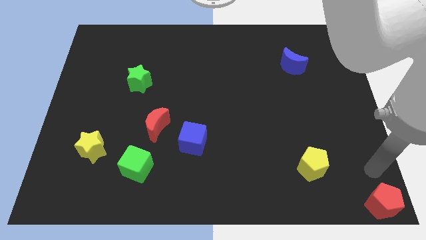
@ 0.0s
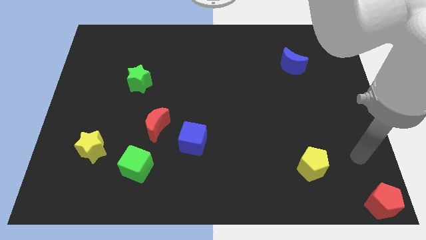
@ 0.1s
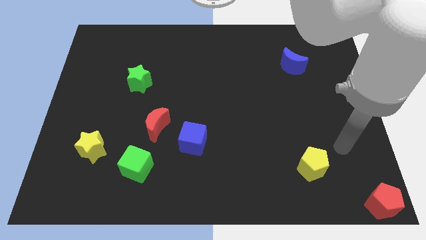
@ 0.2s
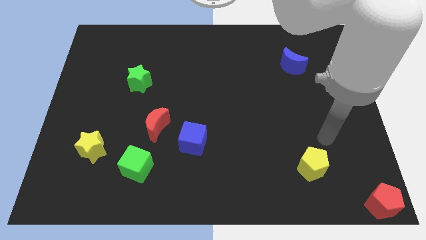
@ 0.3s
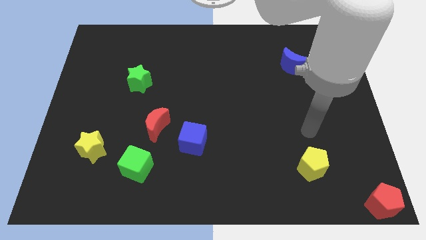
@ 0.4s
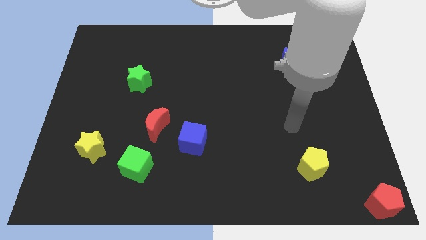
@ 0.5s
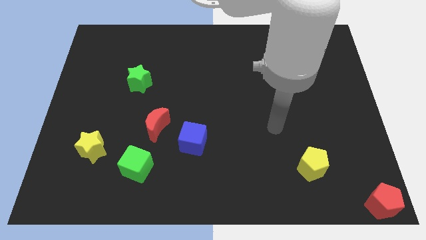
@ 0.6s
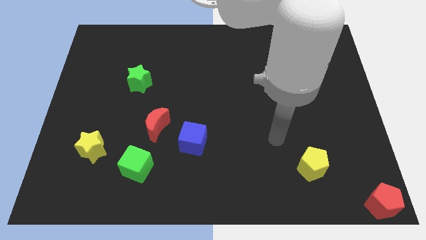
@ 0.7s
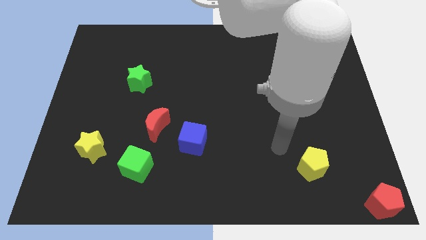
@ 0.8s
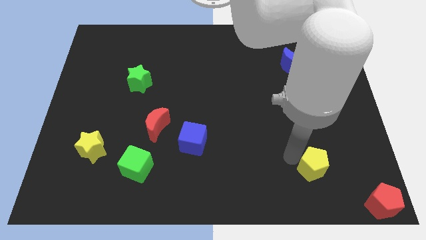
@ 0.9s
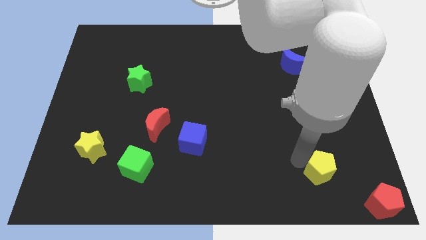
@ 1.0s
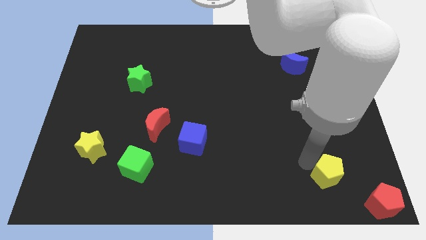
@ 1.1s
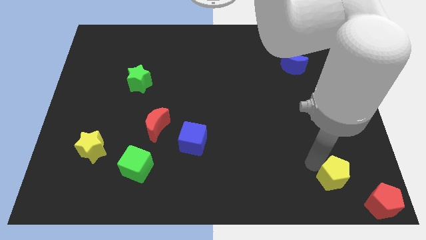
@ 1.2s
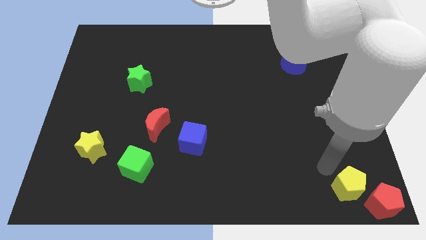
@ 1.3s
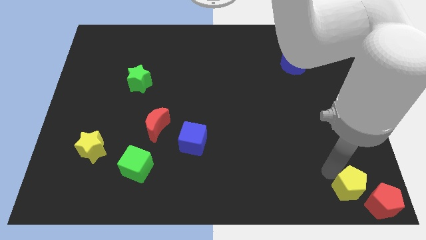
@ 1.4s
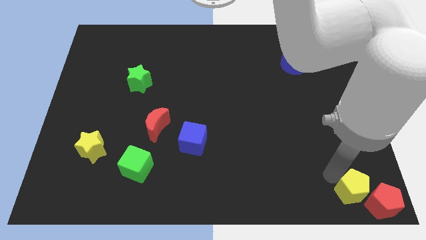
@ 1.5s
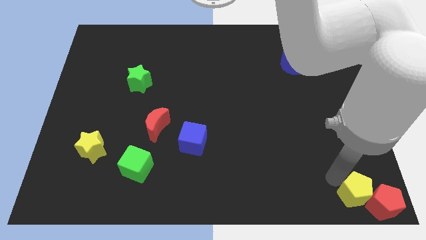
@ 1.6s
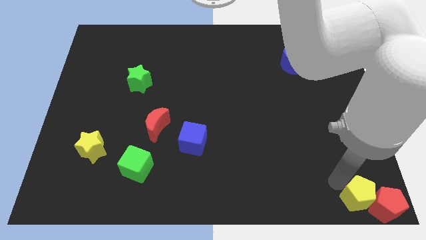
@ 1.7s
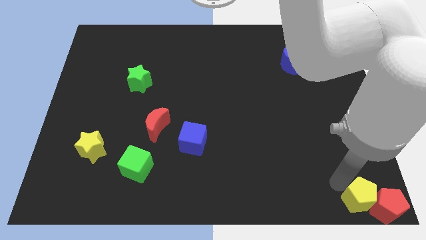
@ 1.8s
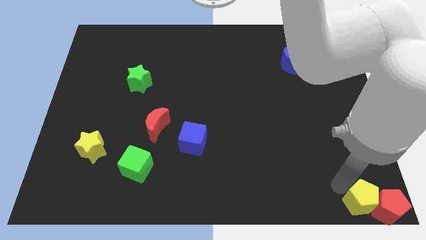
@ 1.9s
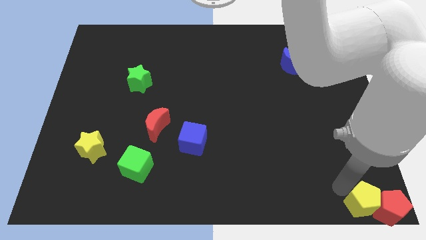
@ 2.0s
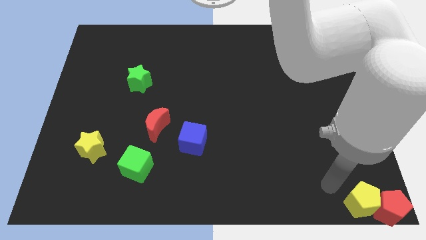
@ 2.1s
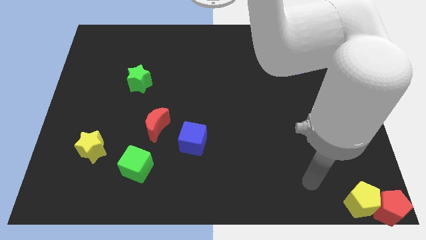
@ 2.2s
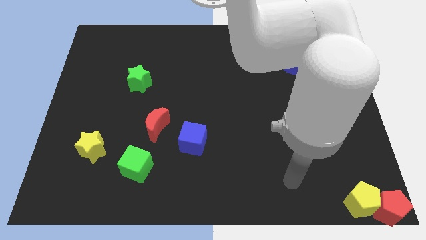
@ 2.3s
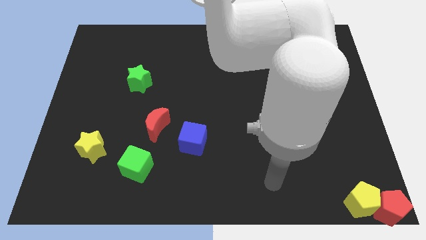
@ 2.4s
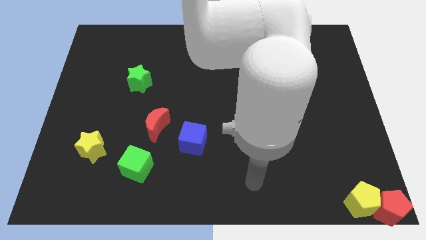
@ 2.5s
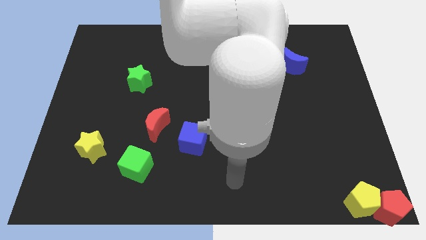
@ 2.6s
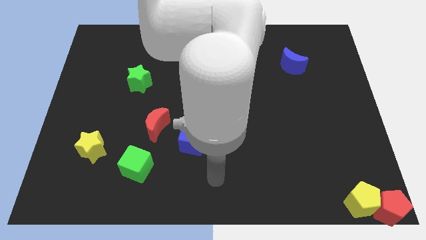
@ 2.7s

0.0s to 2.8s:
move the yellow pentagon to the left of the red pentagon

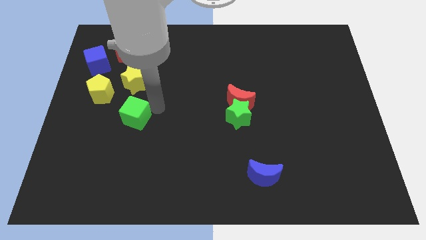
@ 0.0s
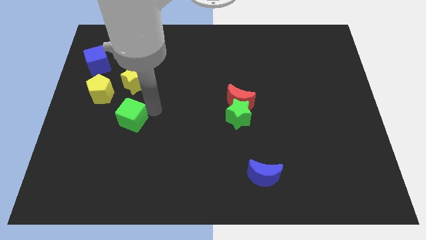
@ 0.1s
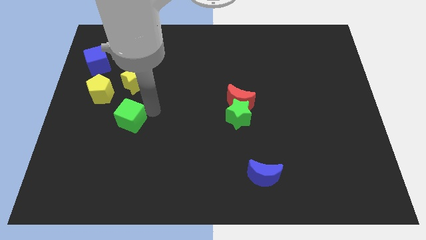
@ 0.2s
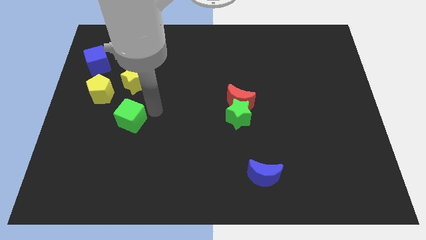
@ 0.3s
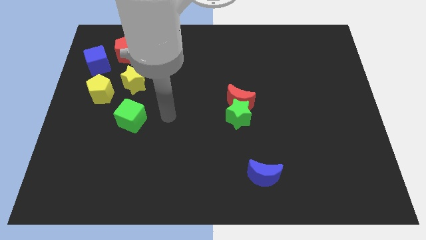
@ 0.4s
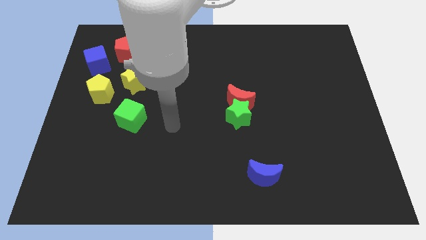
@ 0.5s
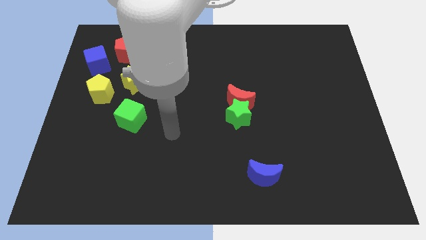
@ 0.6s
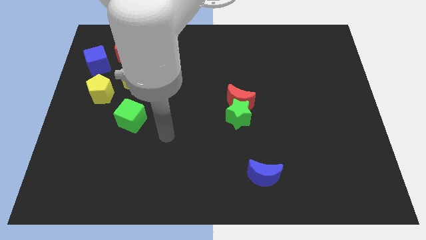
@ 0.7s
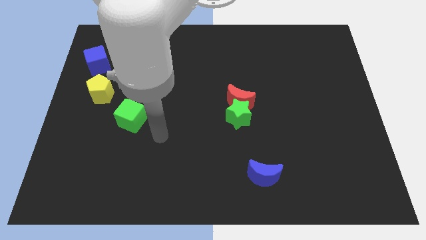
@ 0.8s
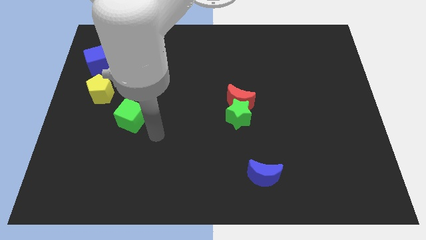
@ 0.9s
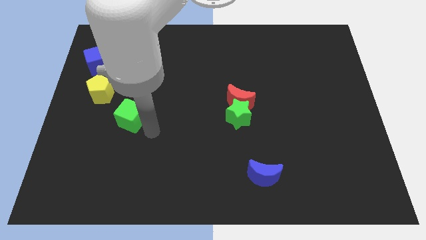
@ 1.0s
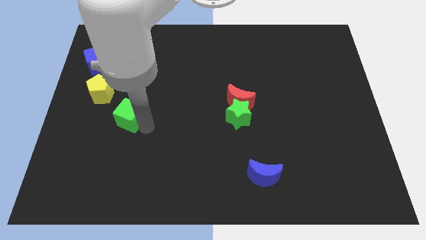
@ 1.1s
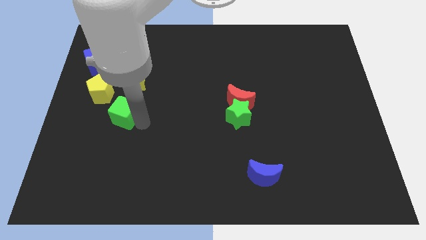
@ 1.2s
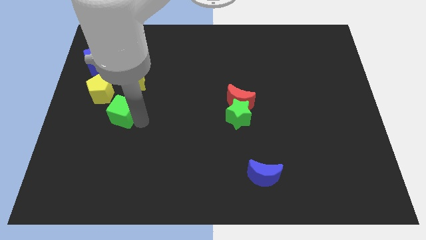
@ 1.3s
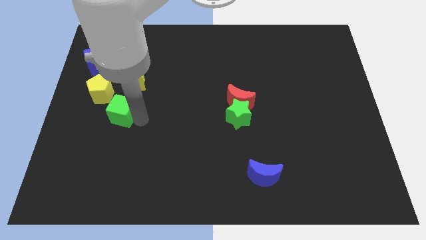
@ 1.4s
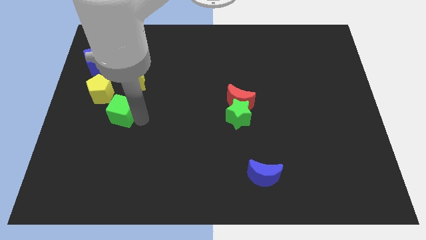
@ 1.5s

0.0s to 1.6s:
place the green cube diagonally to the bottom right of the yellow pentagon

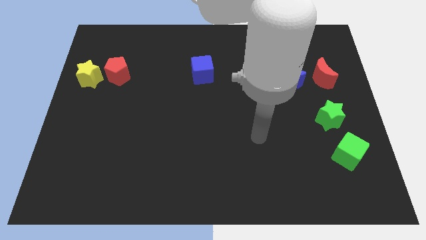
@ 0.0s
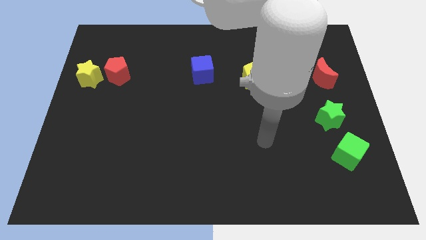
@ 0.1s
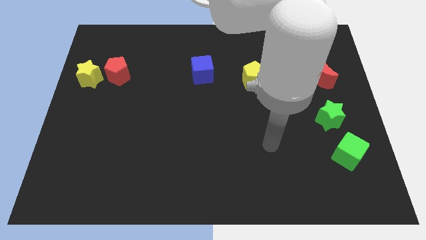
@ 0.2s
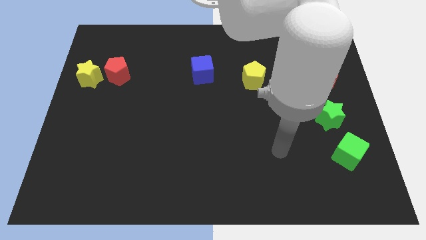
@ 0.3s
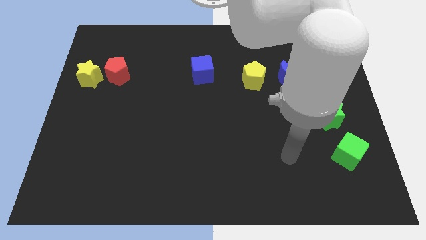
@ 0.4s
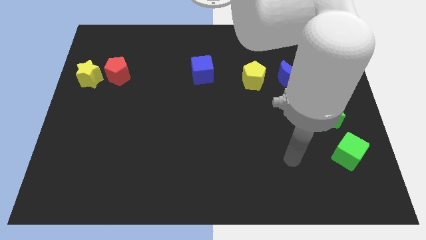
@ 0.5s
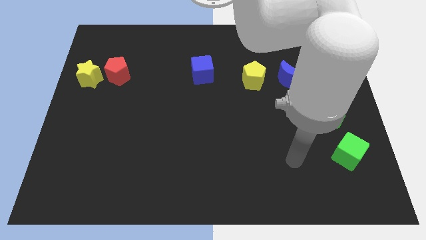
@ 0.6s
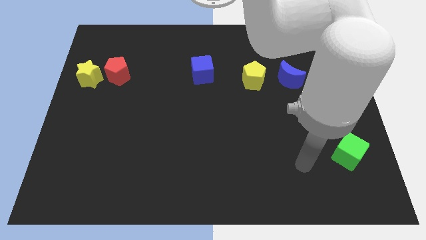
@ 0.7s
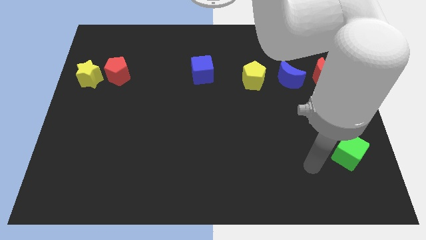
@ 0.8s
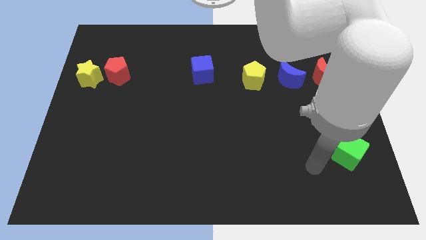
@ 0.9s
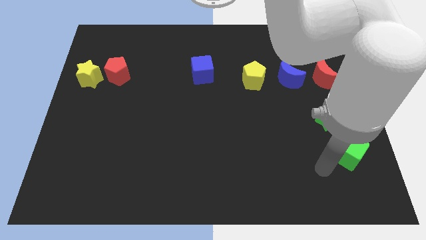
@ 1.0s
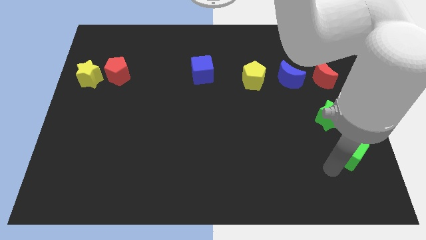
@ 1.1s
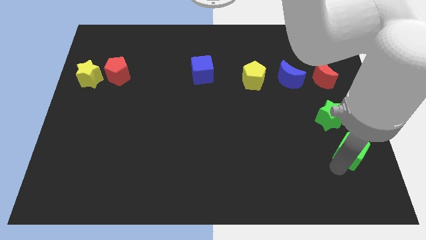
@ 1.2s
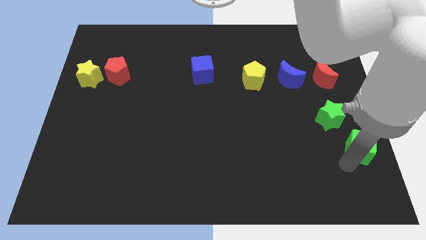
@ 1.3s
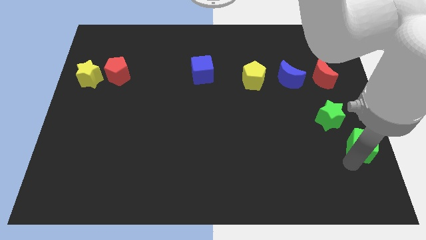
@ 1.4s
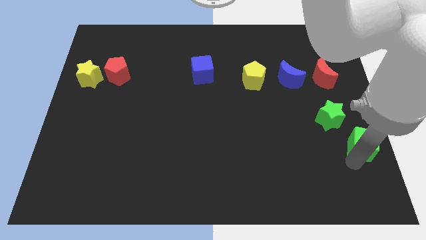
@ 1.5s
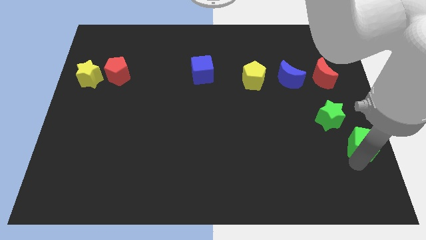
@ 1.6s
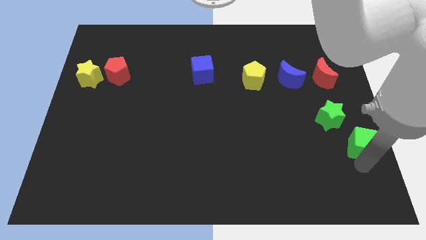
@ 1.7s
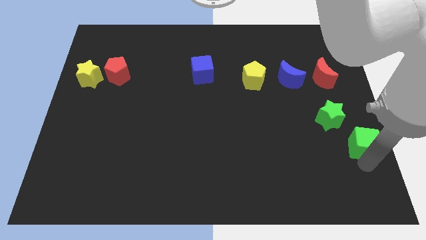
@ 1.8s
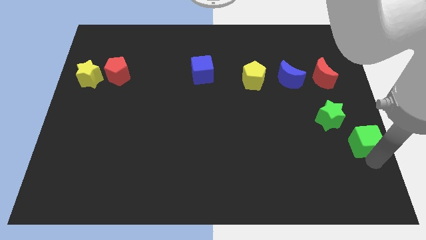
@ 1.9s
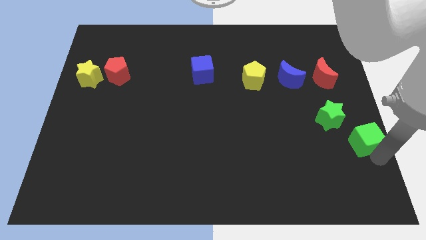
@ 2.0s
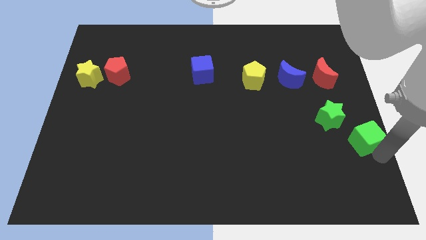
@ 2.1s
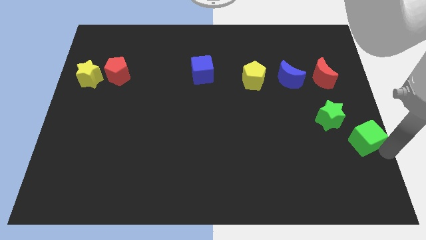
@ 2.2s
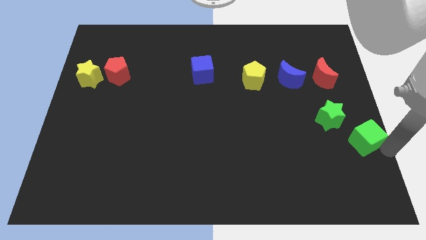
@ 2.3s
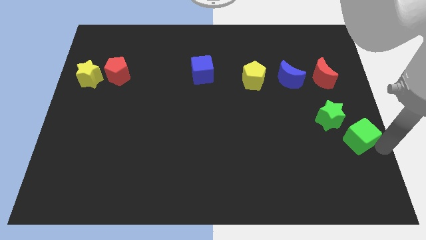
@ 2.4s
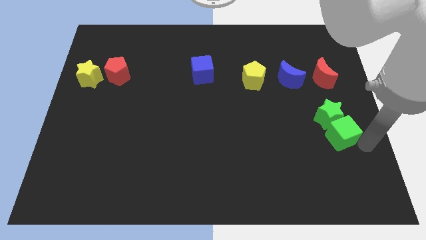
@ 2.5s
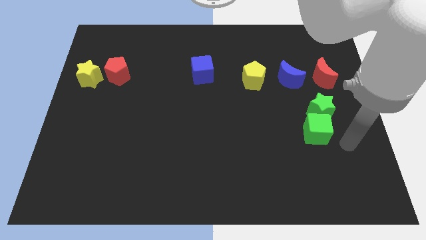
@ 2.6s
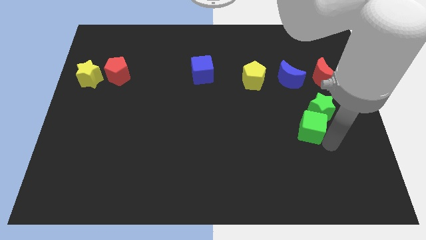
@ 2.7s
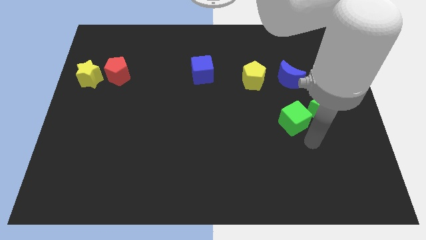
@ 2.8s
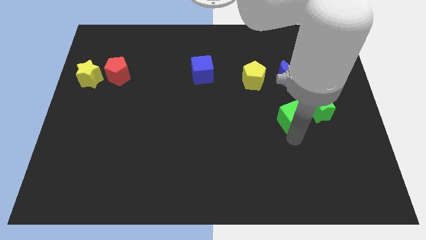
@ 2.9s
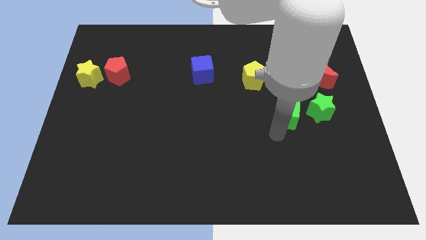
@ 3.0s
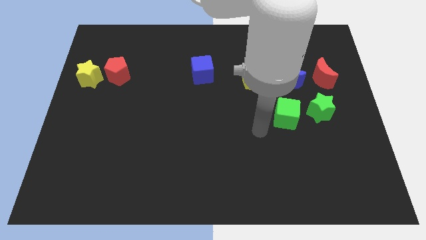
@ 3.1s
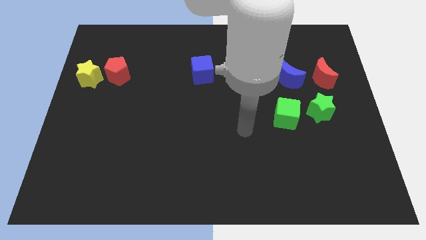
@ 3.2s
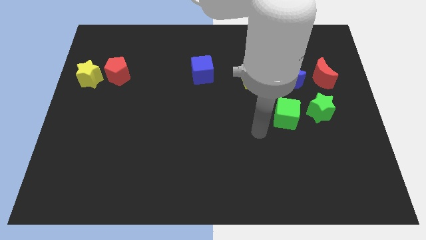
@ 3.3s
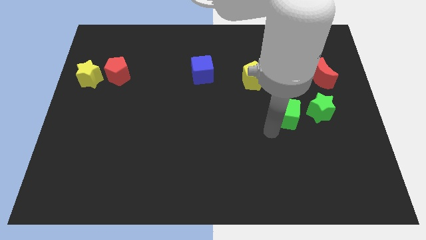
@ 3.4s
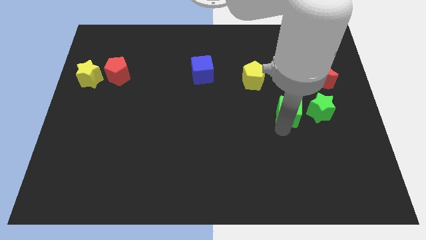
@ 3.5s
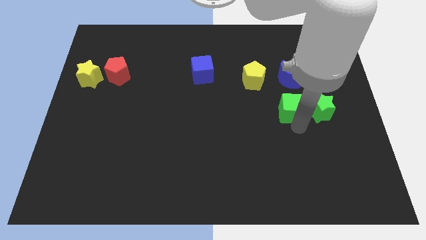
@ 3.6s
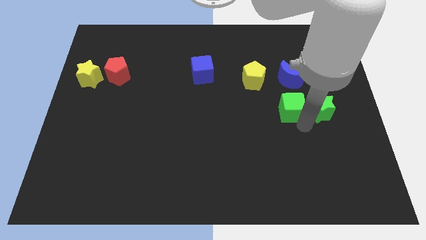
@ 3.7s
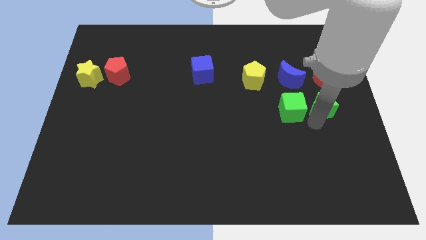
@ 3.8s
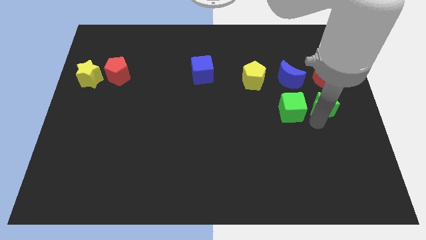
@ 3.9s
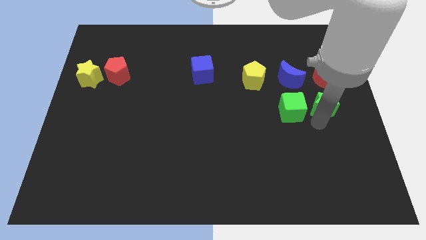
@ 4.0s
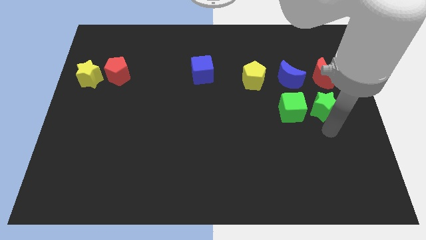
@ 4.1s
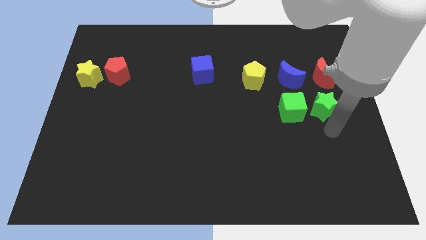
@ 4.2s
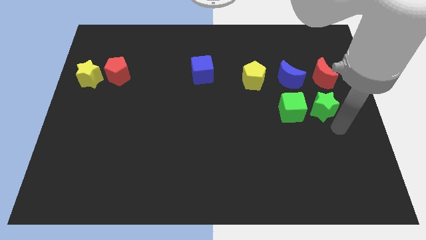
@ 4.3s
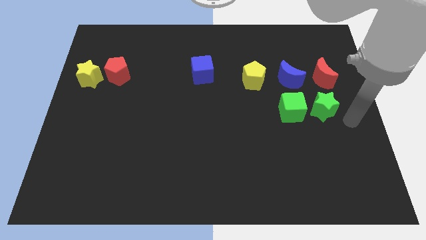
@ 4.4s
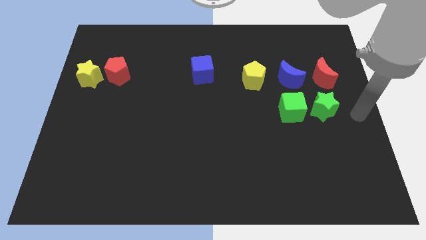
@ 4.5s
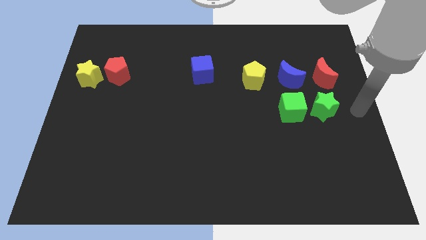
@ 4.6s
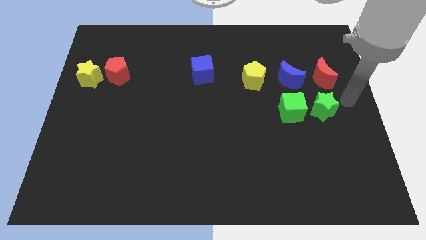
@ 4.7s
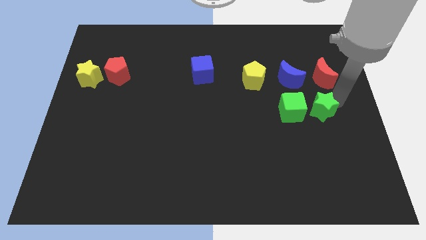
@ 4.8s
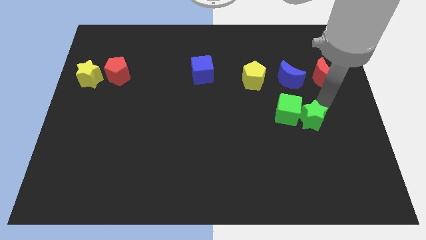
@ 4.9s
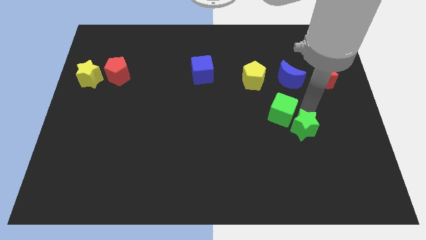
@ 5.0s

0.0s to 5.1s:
push the green blocks towards the bottom side of the board
